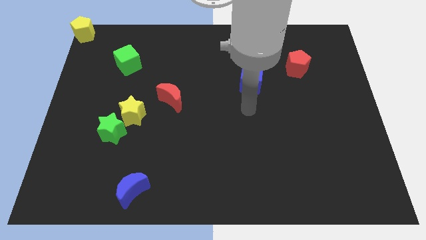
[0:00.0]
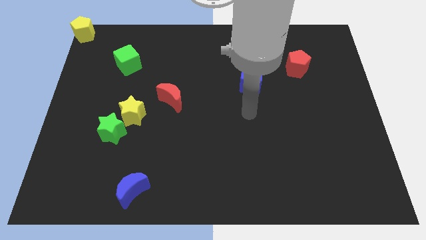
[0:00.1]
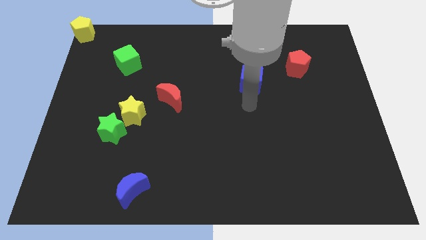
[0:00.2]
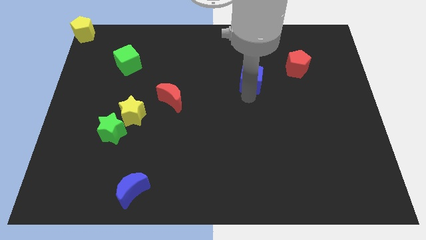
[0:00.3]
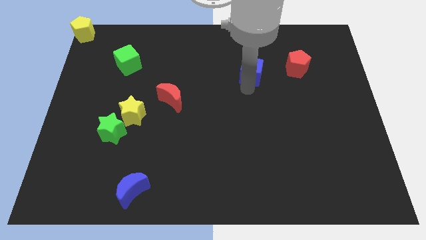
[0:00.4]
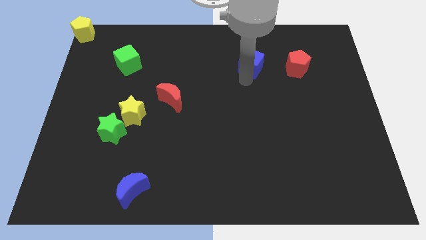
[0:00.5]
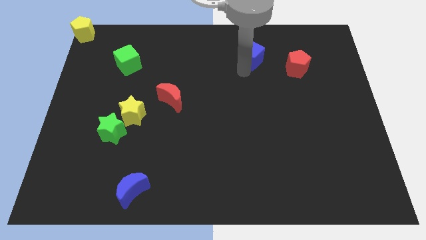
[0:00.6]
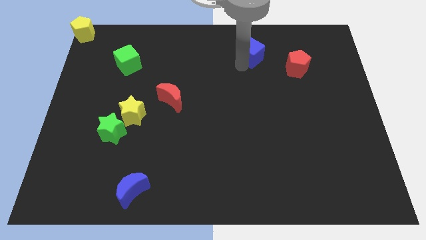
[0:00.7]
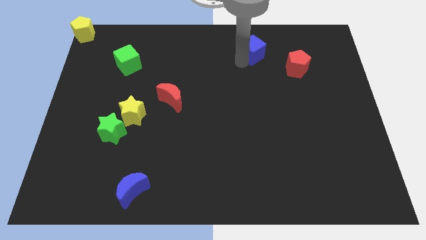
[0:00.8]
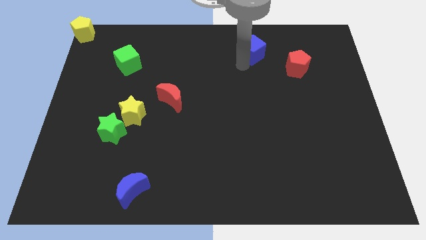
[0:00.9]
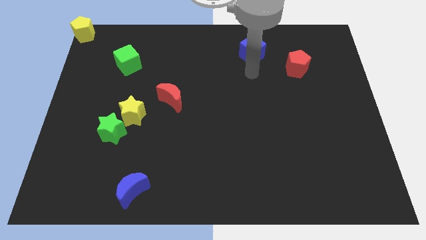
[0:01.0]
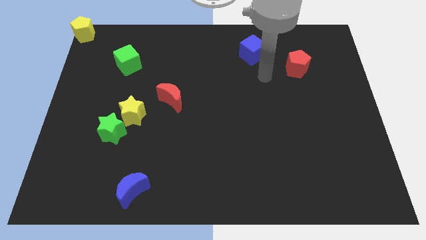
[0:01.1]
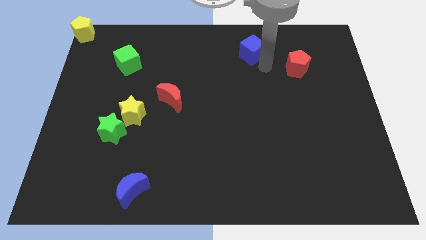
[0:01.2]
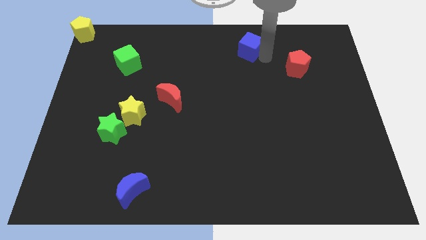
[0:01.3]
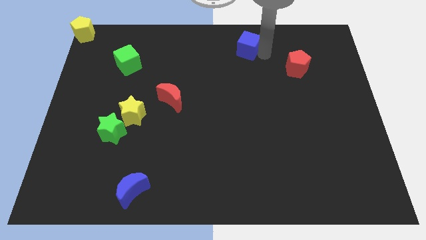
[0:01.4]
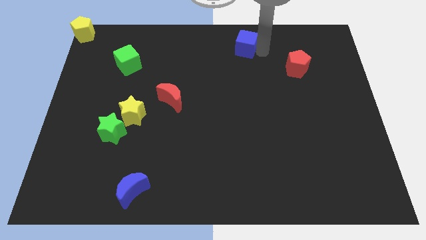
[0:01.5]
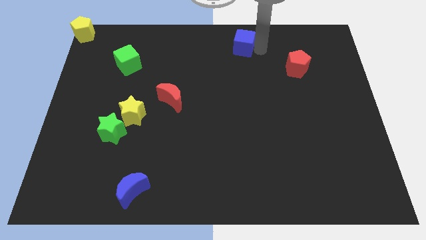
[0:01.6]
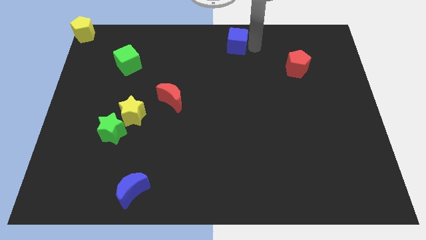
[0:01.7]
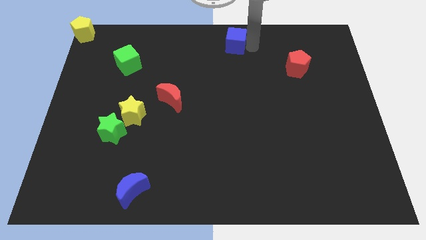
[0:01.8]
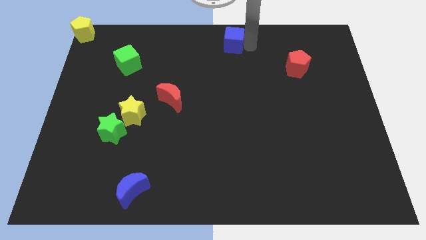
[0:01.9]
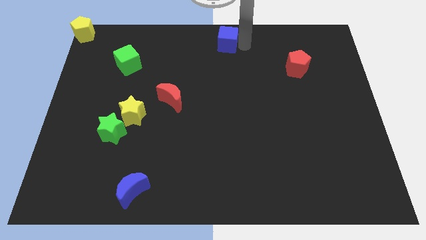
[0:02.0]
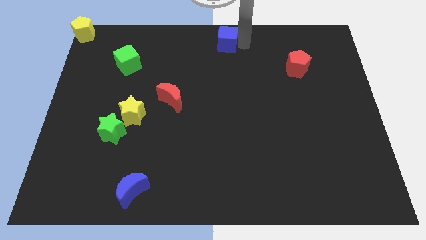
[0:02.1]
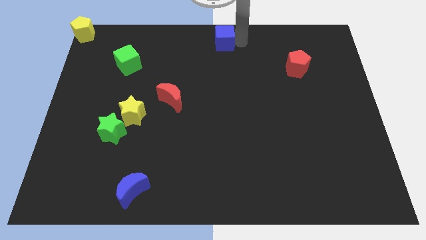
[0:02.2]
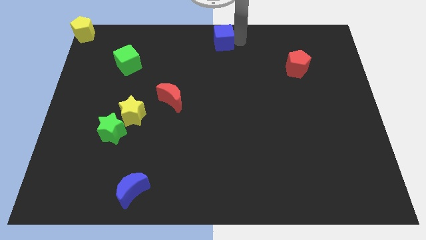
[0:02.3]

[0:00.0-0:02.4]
move the blue cube to the top center of the board

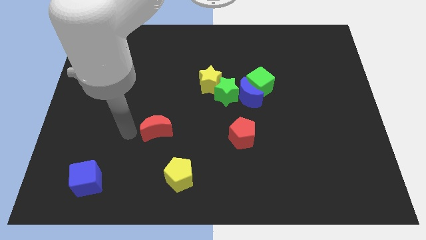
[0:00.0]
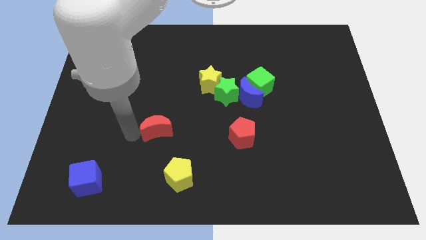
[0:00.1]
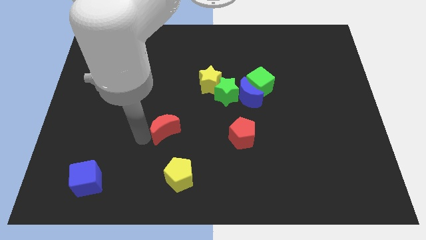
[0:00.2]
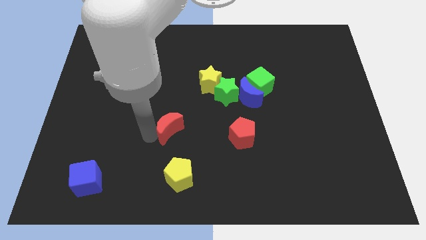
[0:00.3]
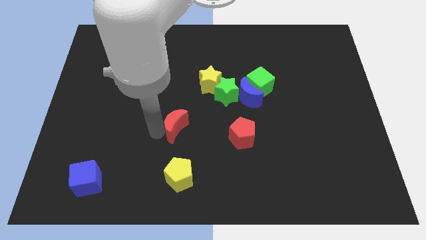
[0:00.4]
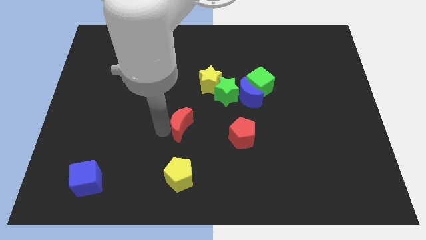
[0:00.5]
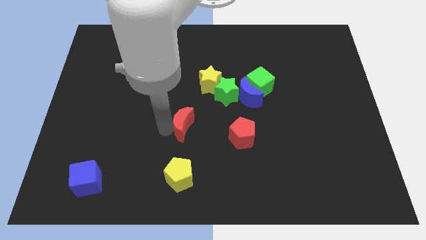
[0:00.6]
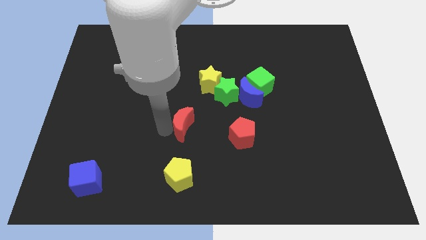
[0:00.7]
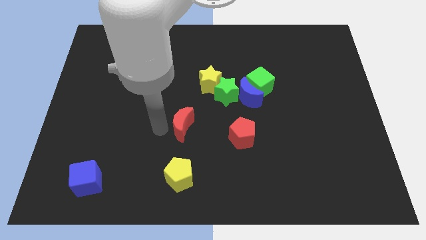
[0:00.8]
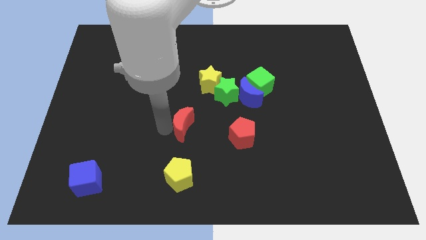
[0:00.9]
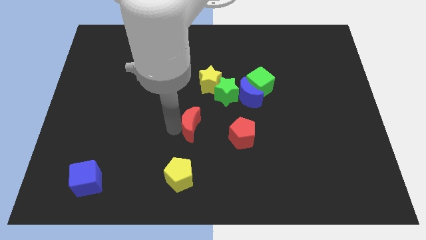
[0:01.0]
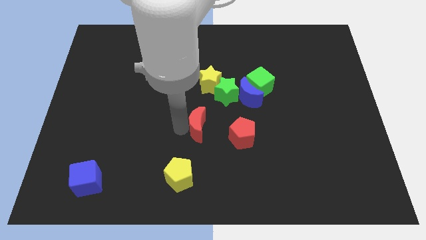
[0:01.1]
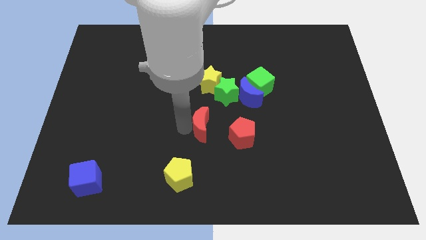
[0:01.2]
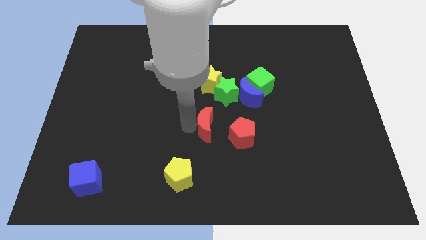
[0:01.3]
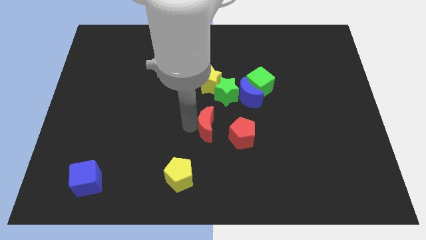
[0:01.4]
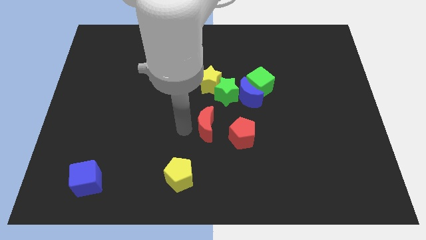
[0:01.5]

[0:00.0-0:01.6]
move the red crescent towards the left side of the red pentagon

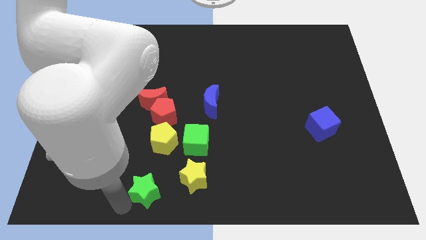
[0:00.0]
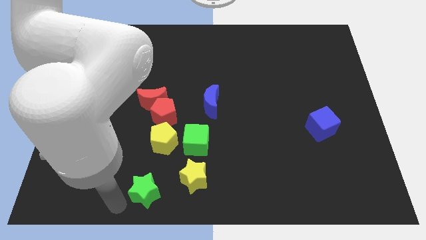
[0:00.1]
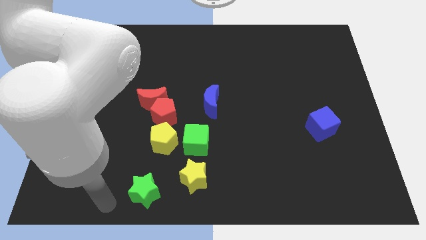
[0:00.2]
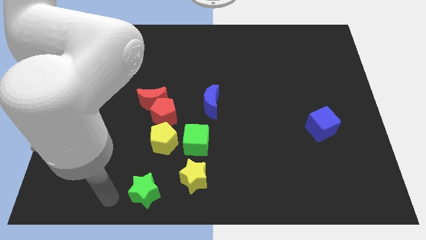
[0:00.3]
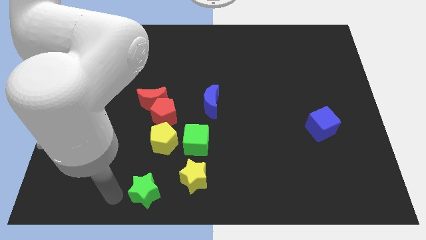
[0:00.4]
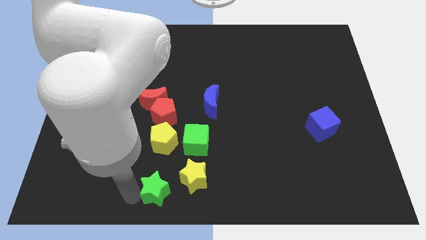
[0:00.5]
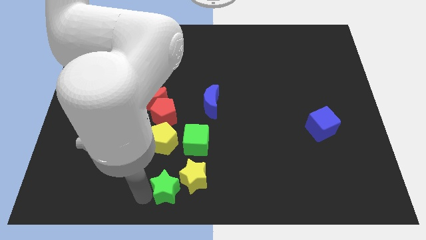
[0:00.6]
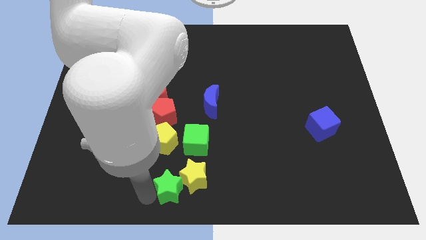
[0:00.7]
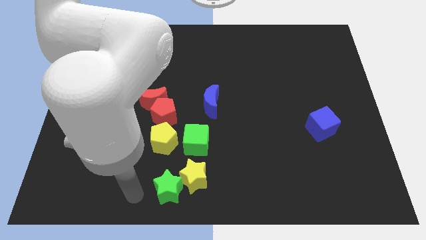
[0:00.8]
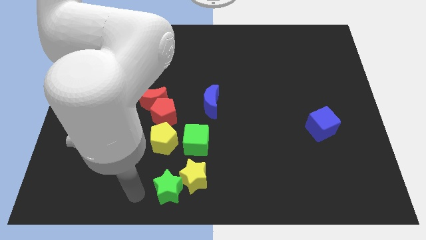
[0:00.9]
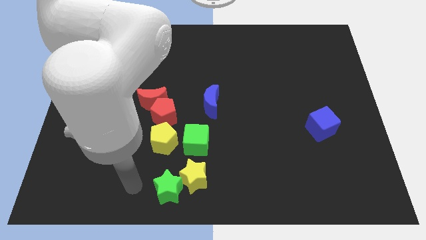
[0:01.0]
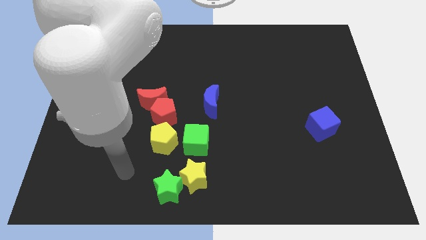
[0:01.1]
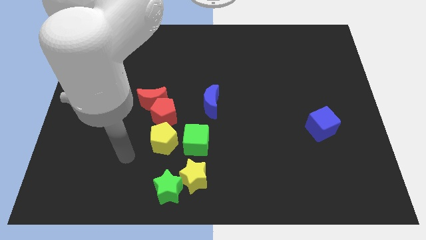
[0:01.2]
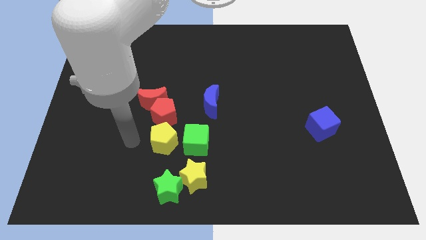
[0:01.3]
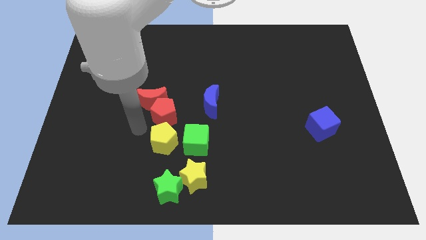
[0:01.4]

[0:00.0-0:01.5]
push the green star into the yellow star

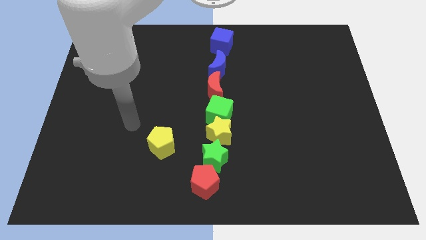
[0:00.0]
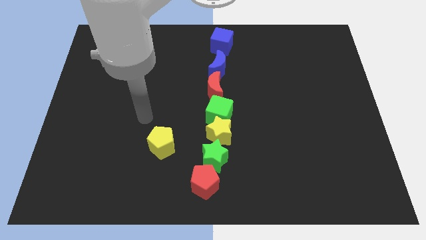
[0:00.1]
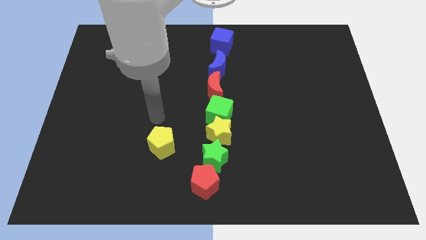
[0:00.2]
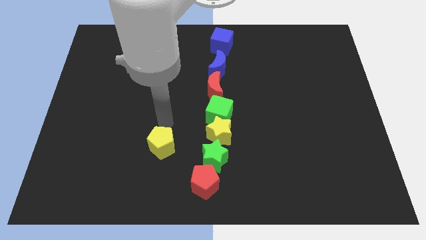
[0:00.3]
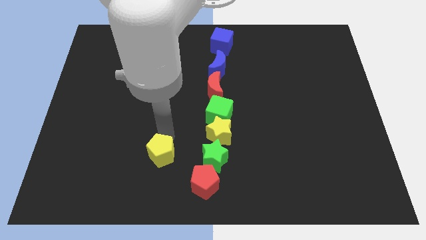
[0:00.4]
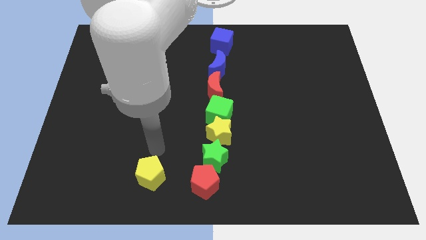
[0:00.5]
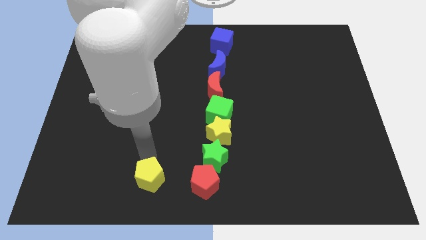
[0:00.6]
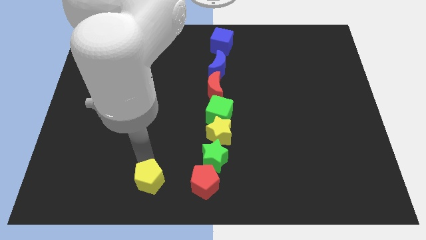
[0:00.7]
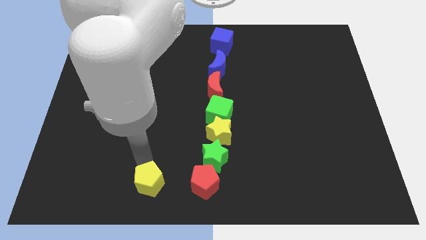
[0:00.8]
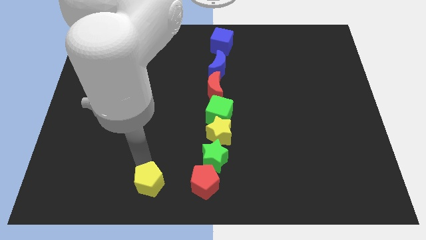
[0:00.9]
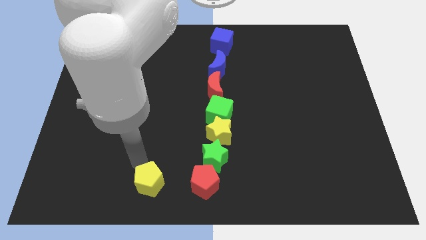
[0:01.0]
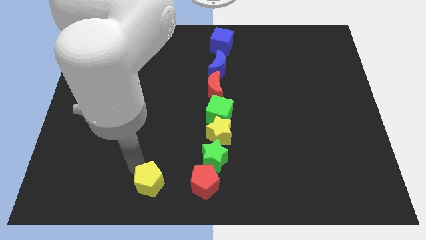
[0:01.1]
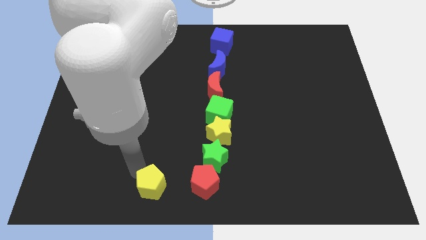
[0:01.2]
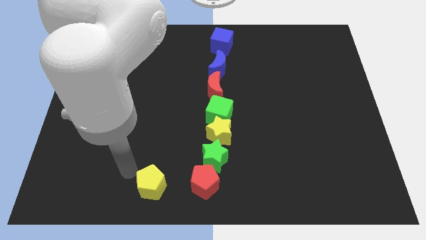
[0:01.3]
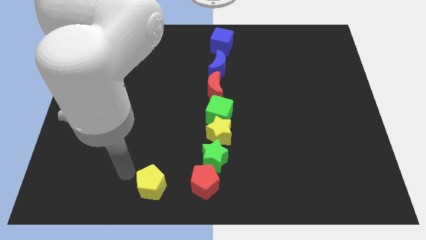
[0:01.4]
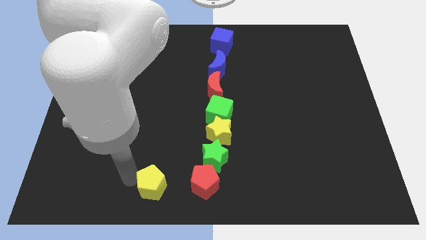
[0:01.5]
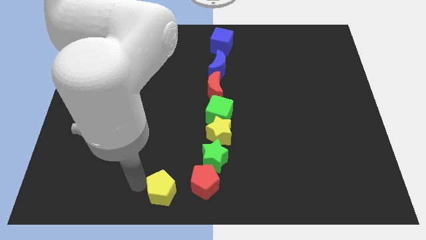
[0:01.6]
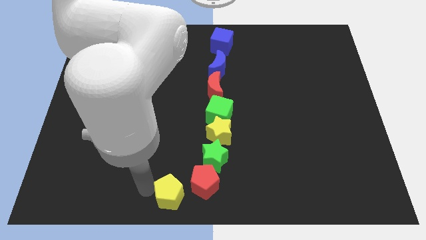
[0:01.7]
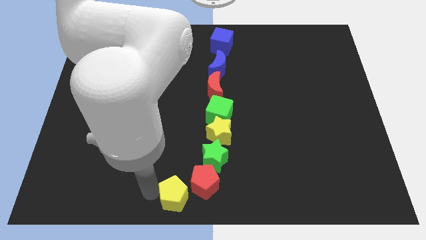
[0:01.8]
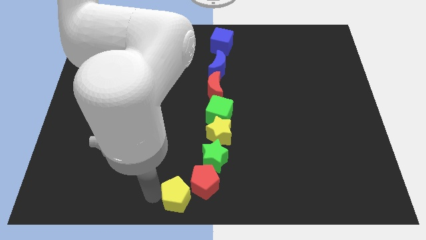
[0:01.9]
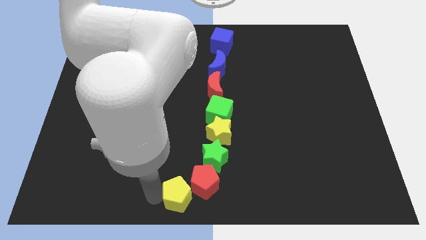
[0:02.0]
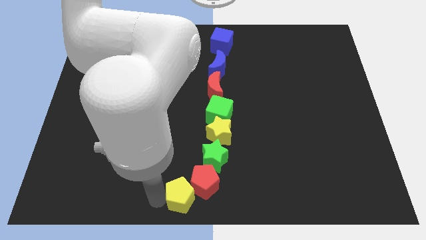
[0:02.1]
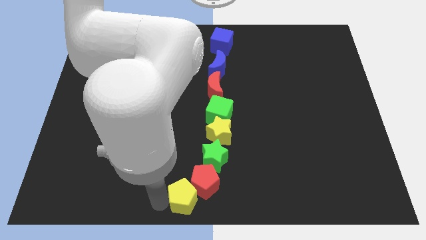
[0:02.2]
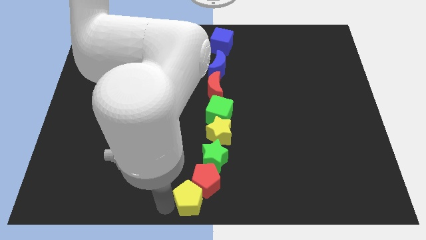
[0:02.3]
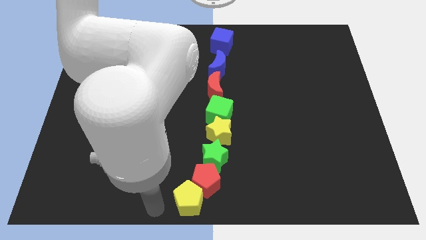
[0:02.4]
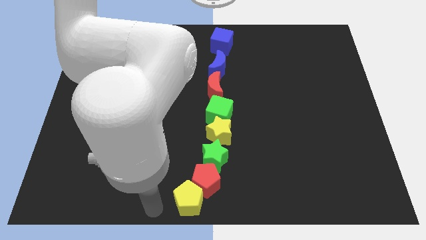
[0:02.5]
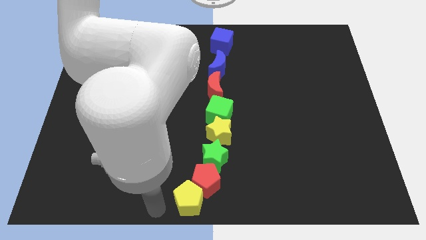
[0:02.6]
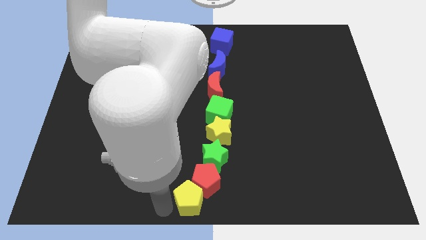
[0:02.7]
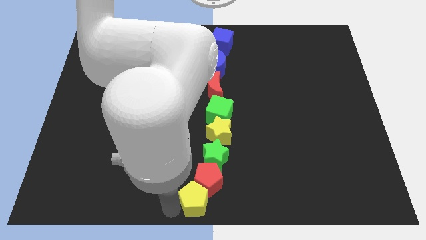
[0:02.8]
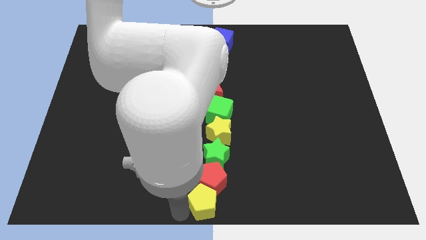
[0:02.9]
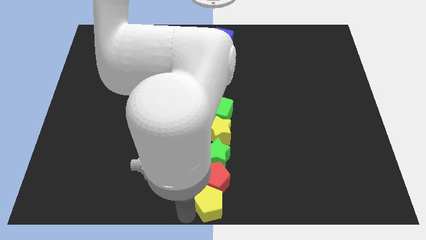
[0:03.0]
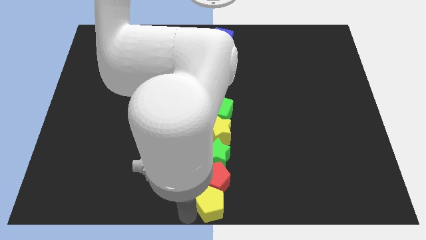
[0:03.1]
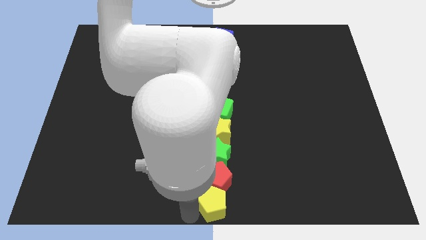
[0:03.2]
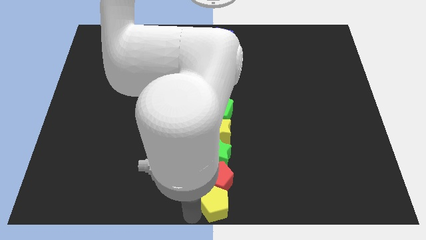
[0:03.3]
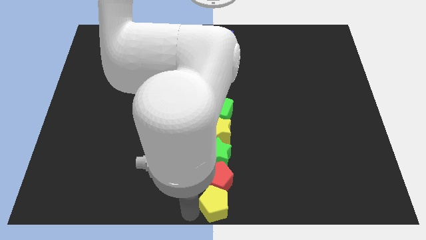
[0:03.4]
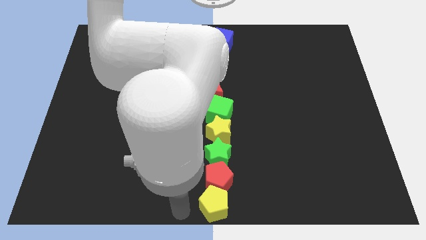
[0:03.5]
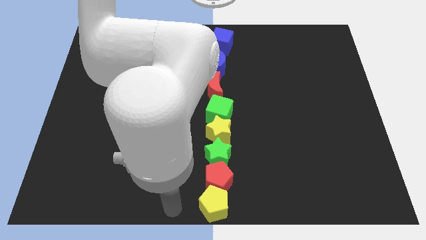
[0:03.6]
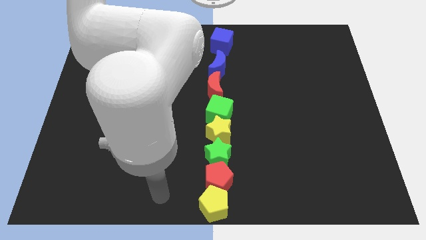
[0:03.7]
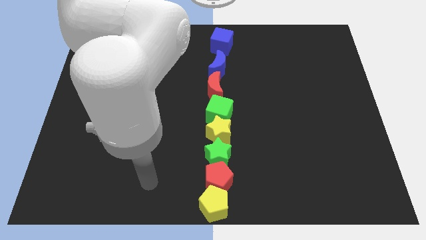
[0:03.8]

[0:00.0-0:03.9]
push the yellow pentagon below the red pentagon
